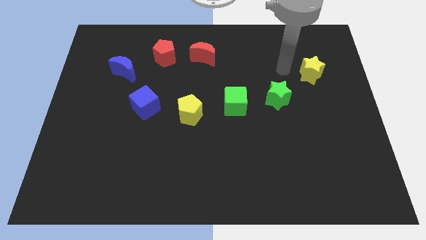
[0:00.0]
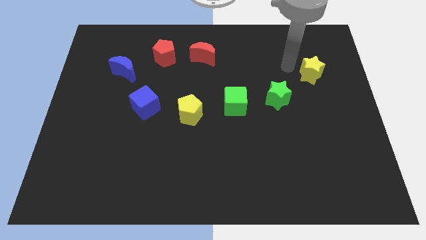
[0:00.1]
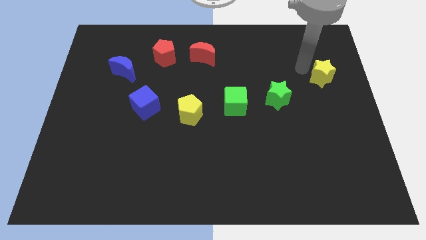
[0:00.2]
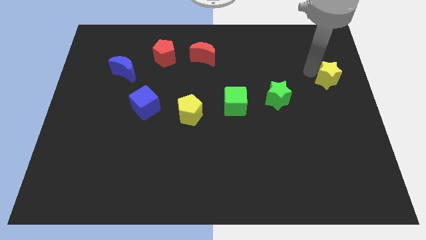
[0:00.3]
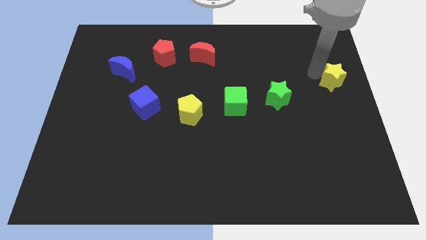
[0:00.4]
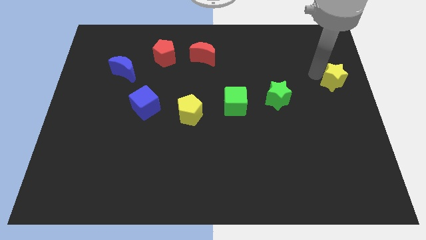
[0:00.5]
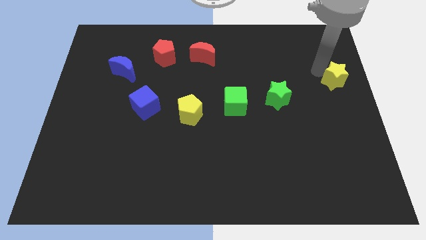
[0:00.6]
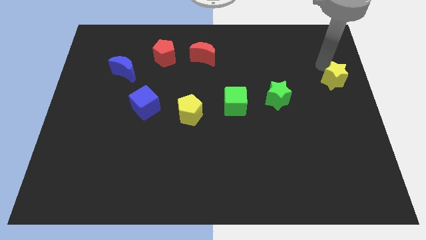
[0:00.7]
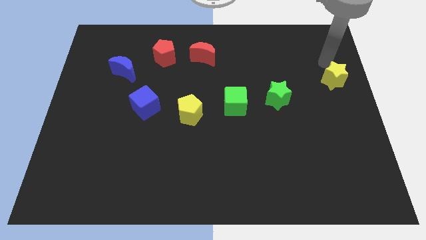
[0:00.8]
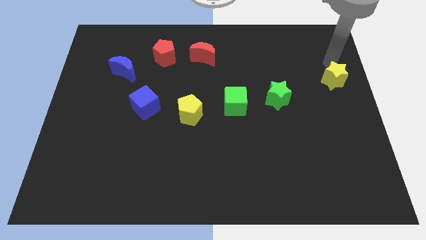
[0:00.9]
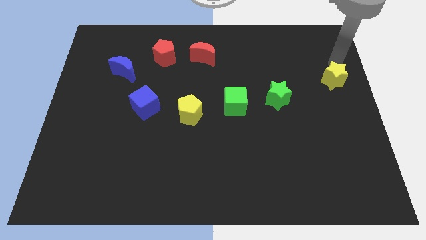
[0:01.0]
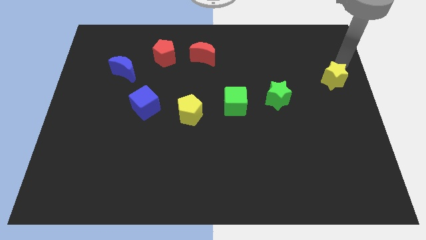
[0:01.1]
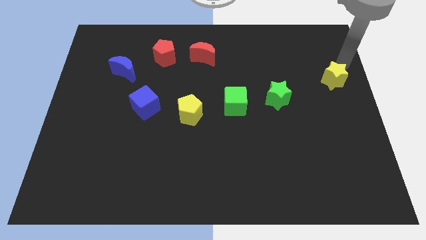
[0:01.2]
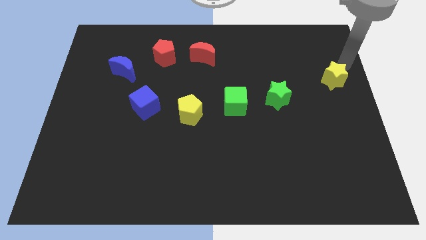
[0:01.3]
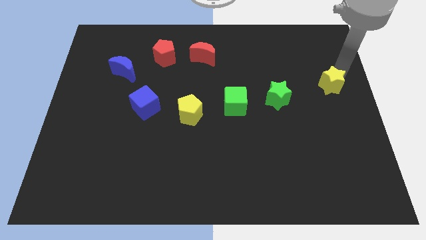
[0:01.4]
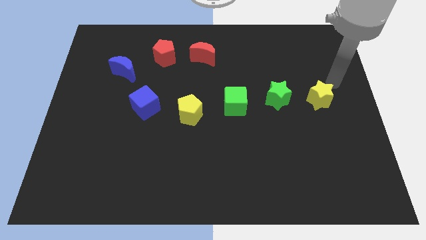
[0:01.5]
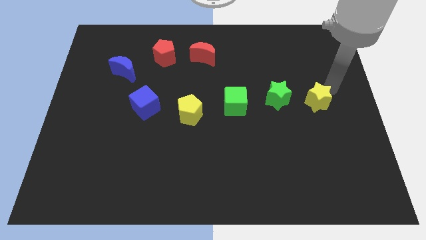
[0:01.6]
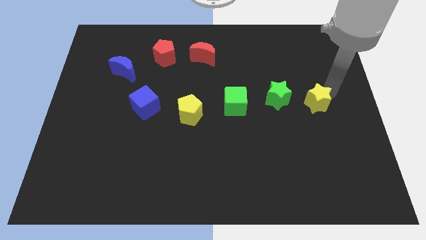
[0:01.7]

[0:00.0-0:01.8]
place the yellow star at right side of the green star

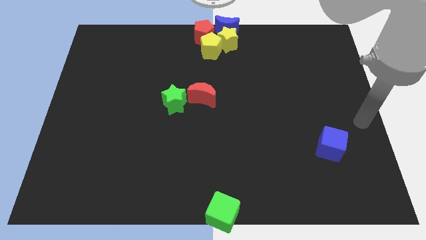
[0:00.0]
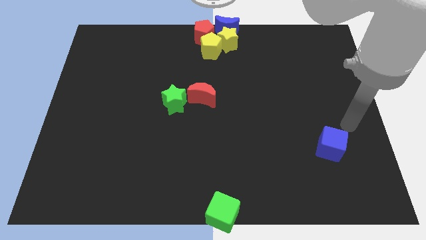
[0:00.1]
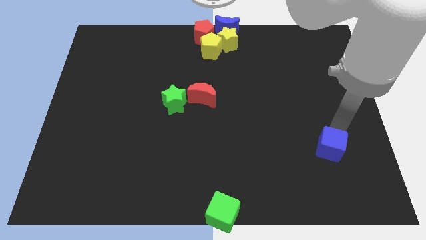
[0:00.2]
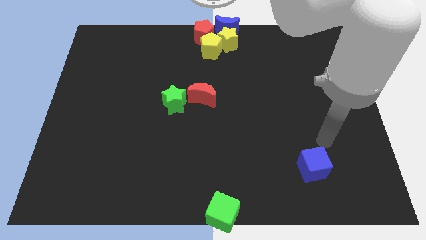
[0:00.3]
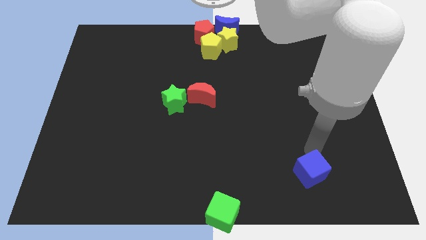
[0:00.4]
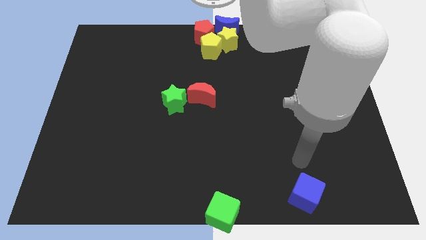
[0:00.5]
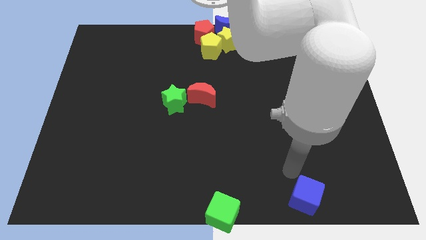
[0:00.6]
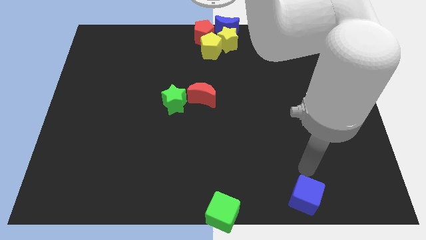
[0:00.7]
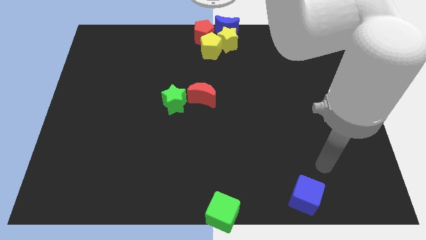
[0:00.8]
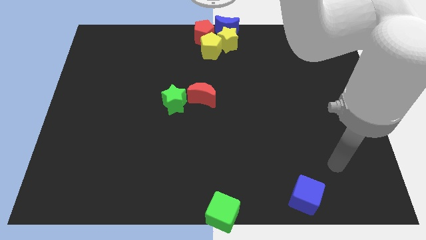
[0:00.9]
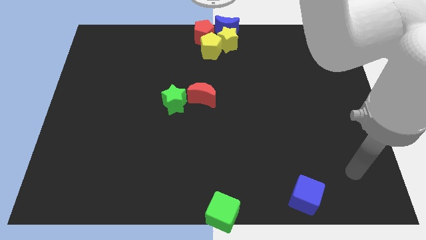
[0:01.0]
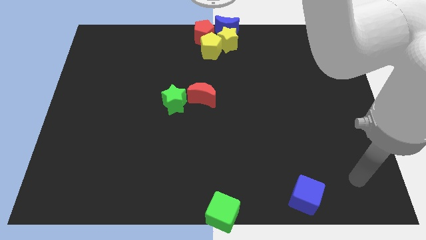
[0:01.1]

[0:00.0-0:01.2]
move the blue block to the bottom center of the board

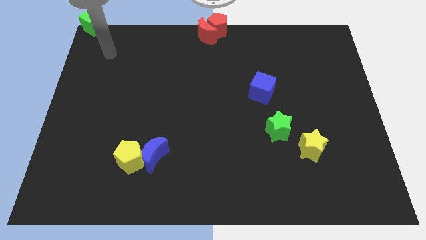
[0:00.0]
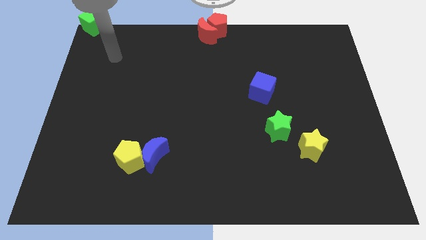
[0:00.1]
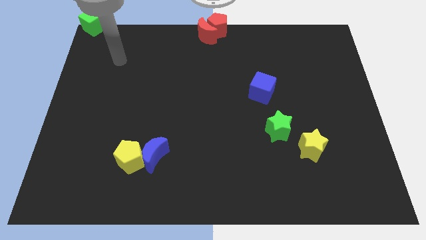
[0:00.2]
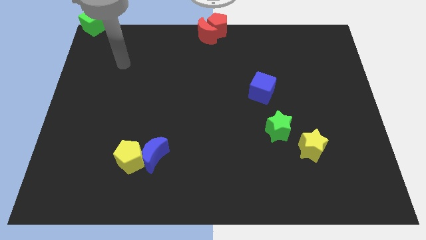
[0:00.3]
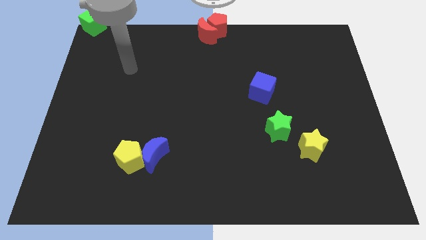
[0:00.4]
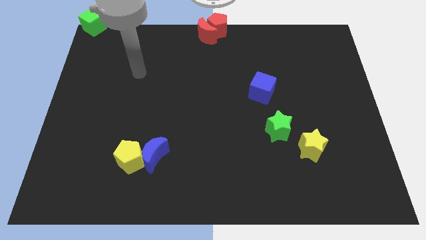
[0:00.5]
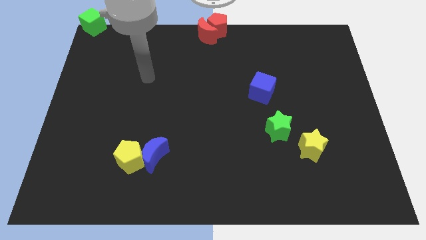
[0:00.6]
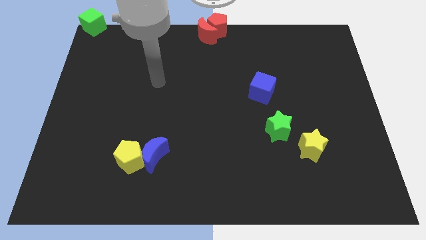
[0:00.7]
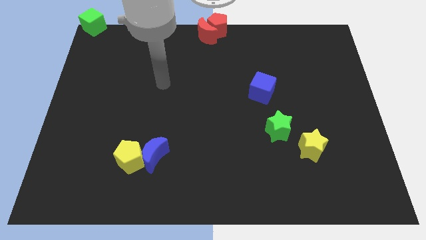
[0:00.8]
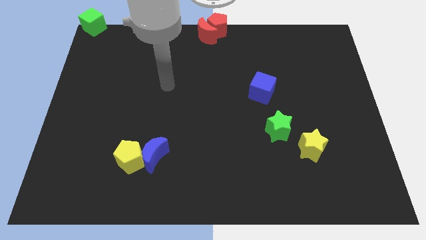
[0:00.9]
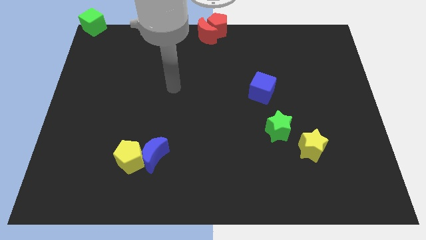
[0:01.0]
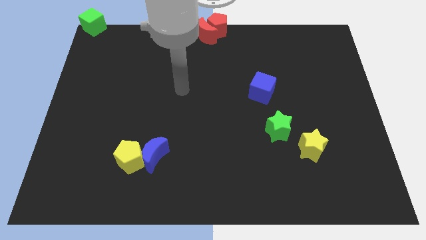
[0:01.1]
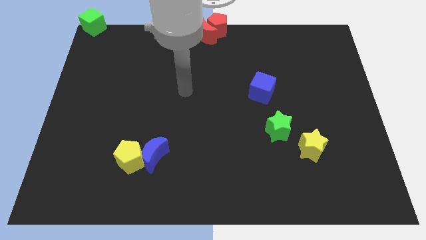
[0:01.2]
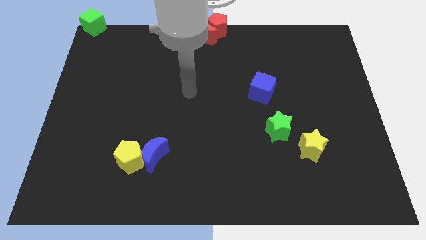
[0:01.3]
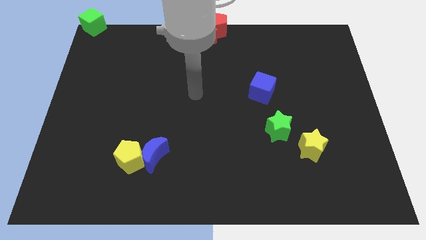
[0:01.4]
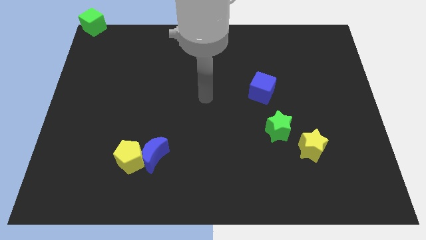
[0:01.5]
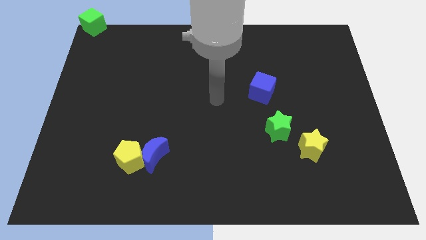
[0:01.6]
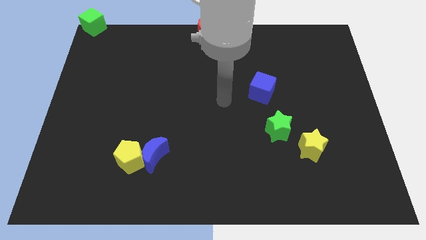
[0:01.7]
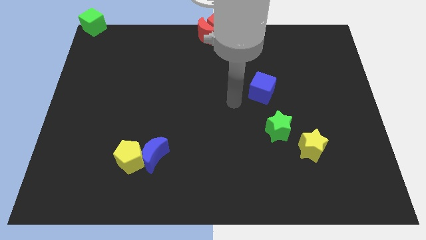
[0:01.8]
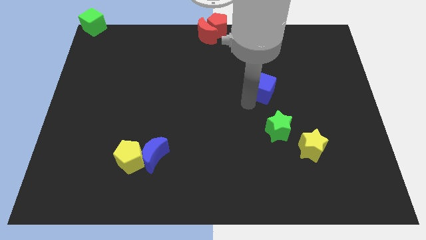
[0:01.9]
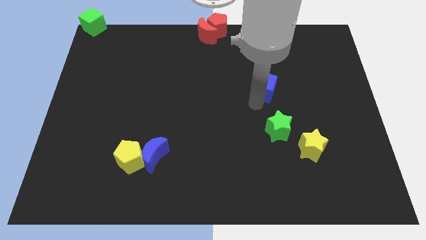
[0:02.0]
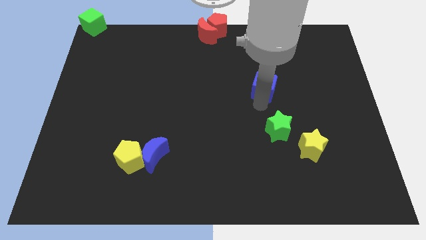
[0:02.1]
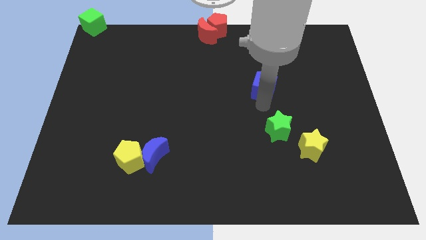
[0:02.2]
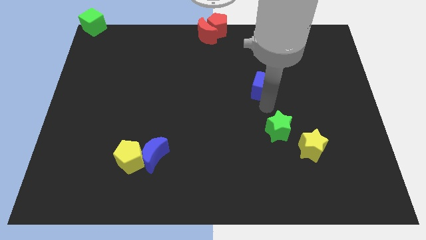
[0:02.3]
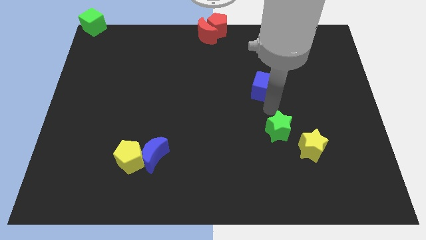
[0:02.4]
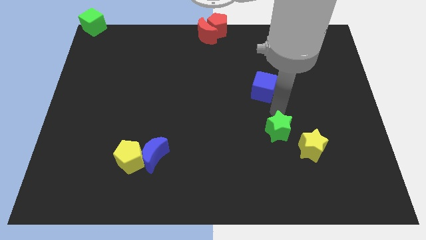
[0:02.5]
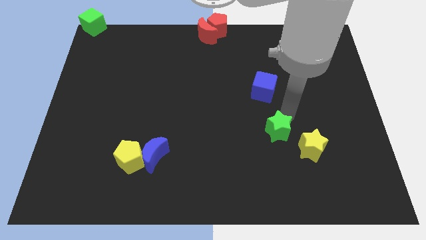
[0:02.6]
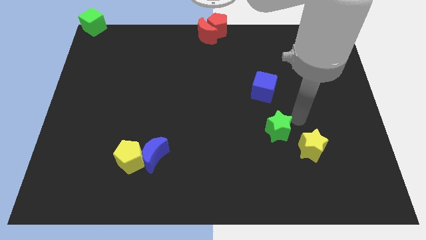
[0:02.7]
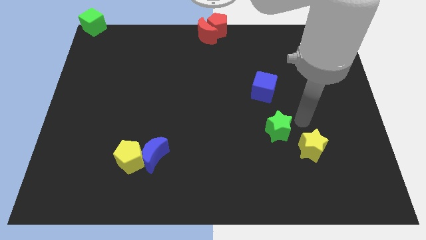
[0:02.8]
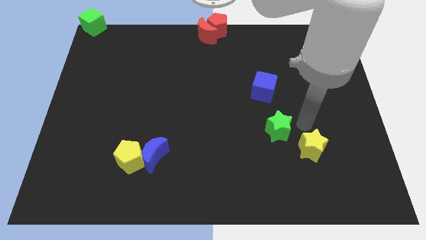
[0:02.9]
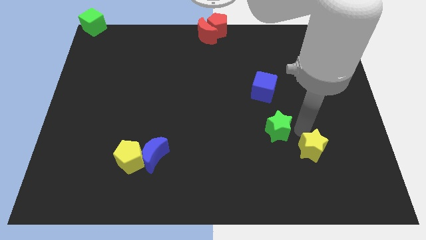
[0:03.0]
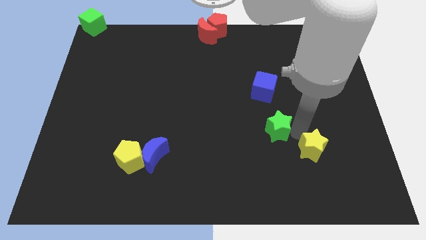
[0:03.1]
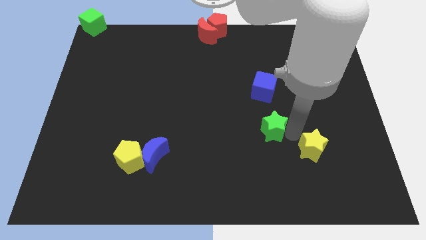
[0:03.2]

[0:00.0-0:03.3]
move the green star bottom of the blue cube

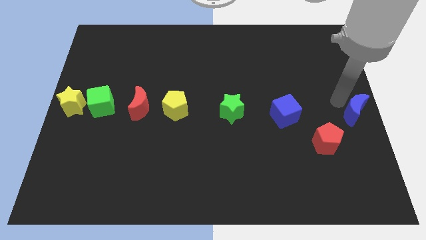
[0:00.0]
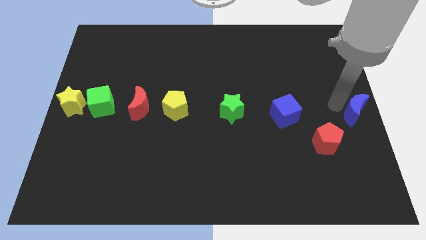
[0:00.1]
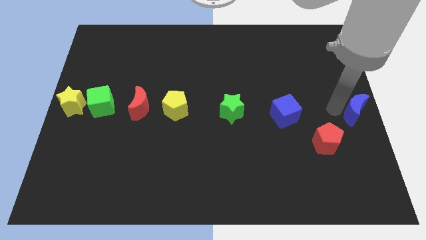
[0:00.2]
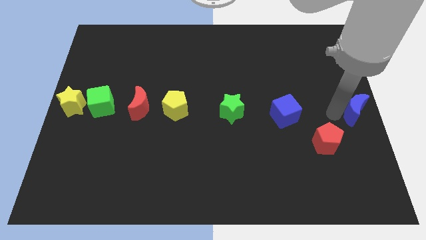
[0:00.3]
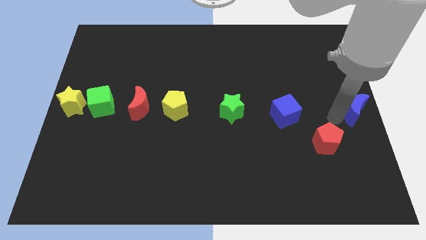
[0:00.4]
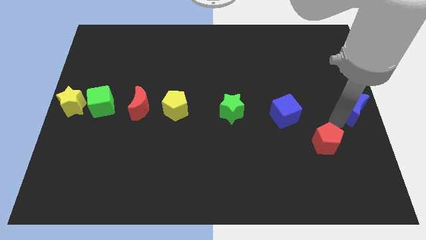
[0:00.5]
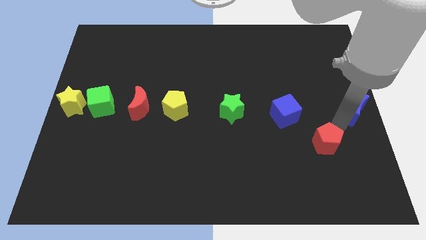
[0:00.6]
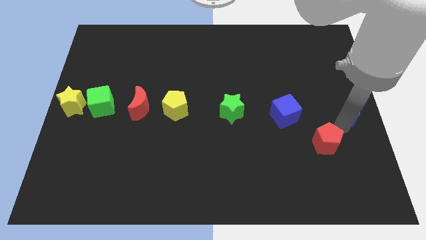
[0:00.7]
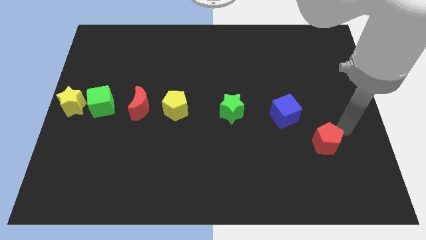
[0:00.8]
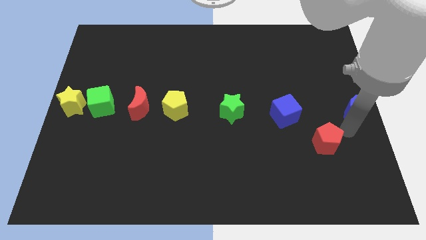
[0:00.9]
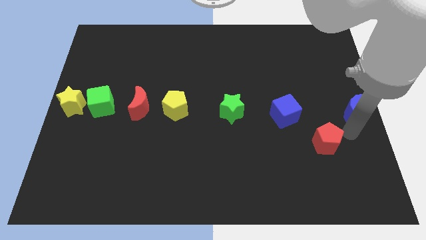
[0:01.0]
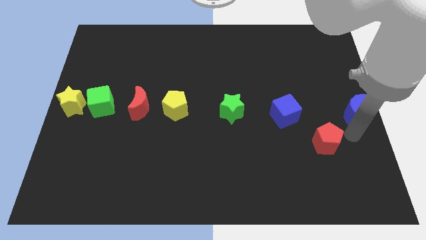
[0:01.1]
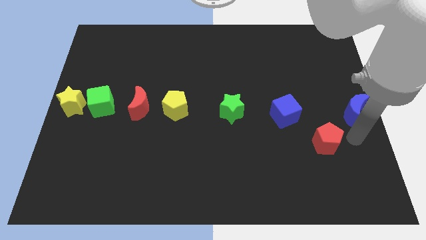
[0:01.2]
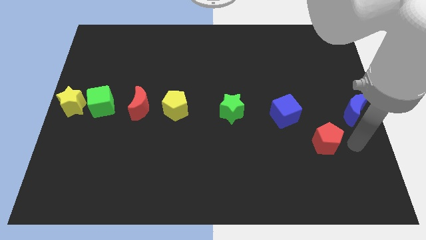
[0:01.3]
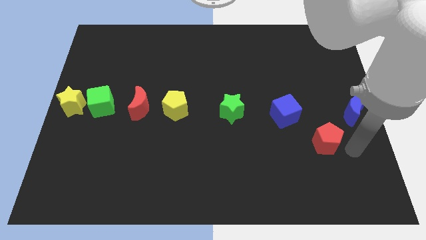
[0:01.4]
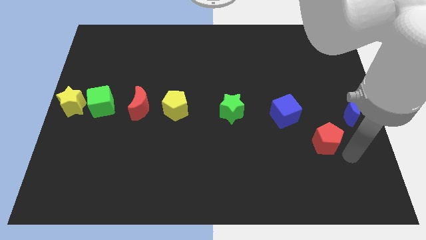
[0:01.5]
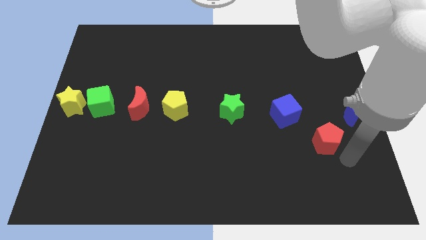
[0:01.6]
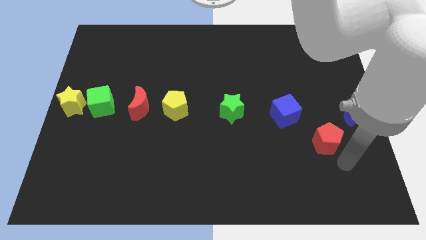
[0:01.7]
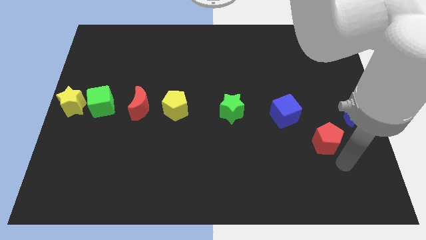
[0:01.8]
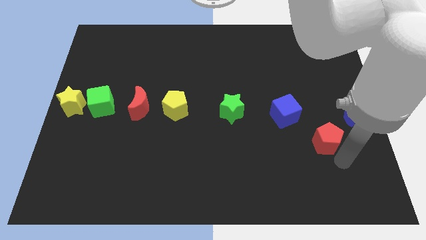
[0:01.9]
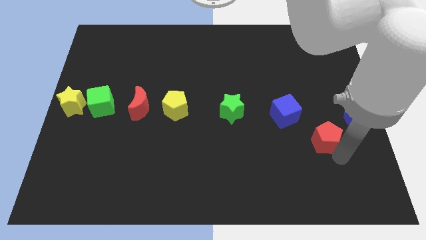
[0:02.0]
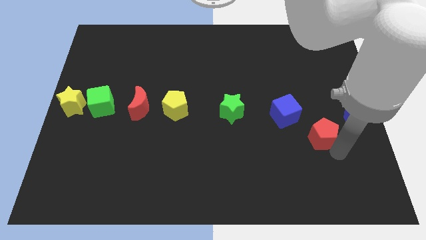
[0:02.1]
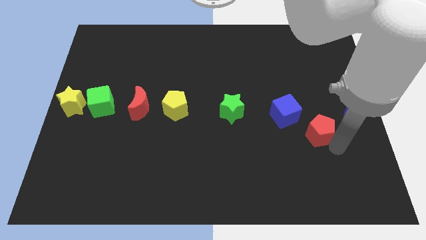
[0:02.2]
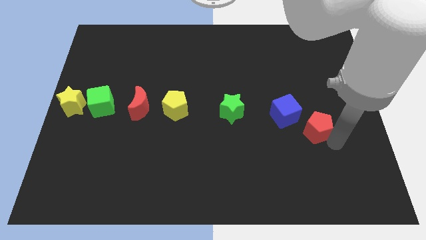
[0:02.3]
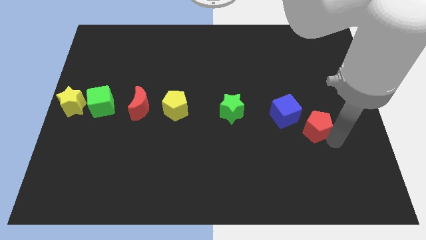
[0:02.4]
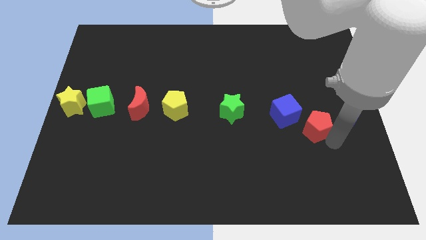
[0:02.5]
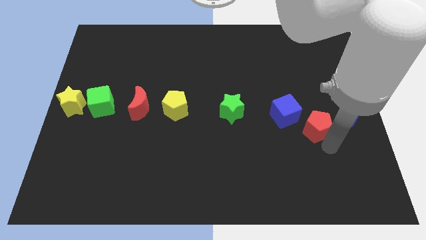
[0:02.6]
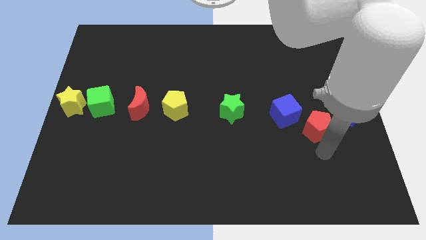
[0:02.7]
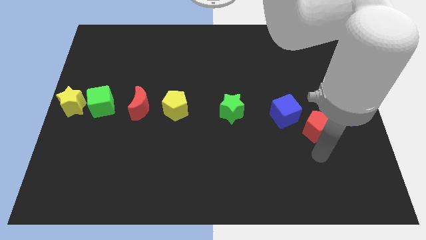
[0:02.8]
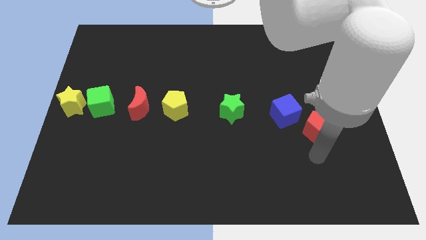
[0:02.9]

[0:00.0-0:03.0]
push the red pentagon to the bottom right side of the blue cube
